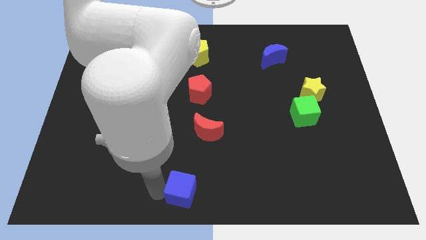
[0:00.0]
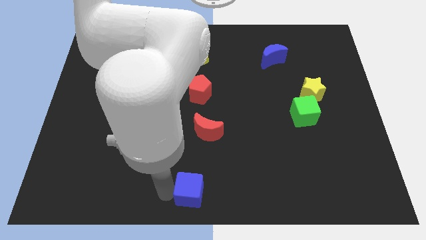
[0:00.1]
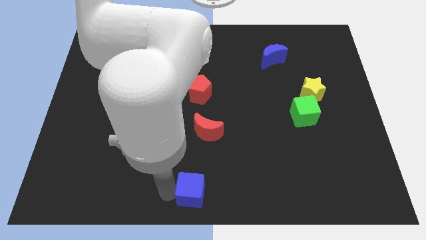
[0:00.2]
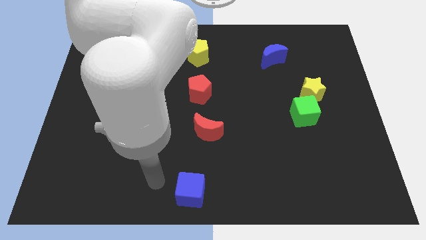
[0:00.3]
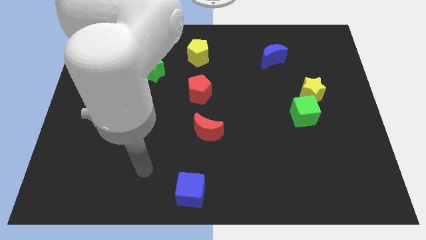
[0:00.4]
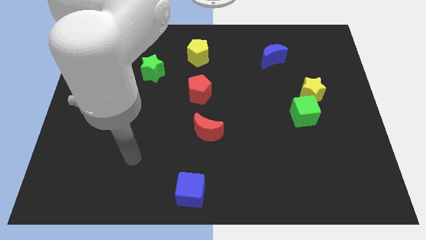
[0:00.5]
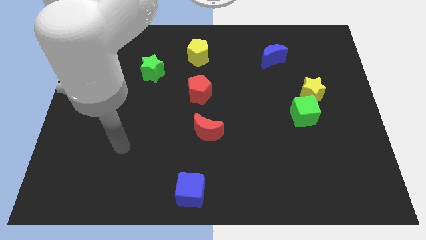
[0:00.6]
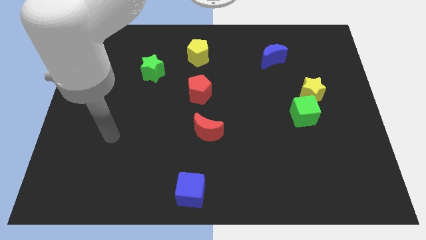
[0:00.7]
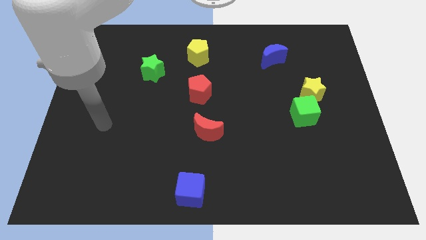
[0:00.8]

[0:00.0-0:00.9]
move your arm away from the blue cube

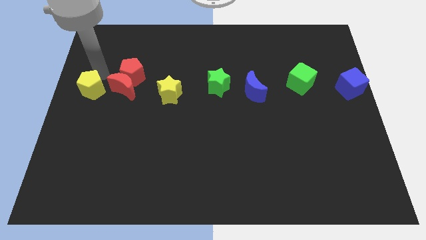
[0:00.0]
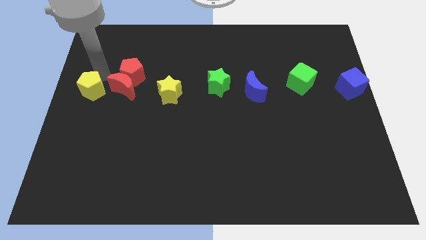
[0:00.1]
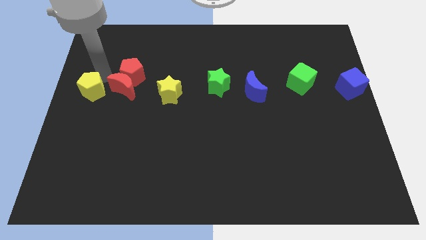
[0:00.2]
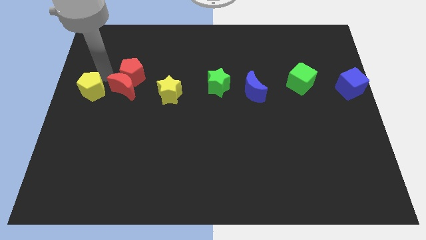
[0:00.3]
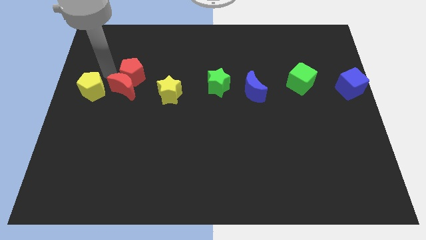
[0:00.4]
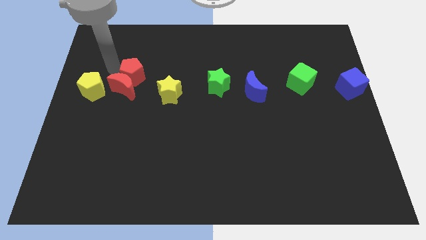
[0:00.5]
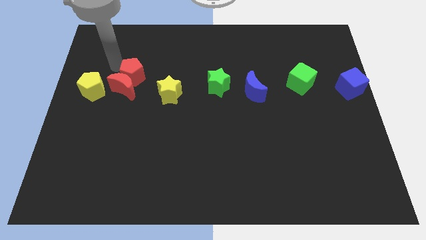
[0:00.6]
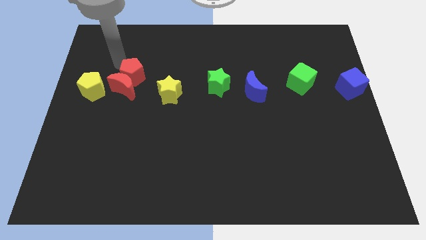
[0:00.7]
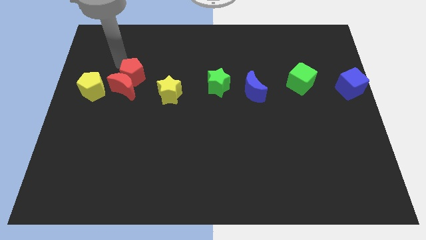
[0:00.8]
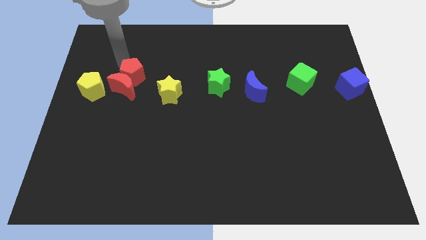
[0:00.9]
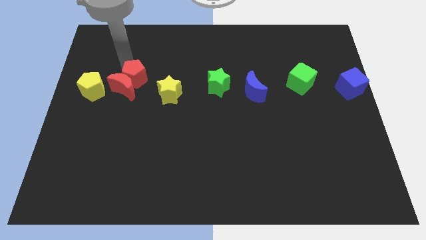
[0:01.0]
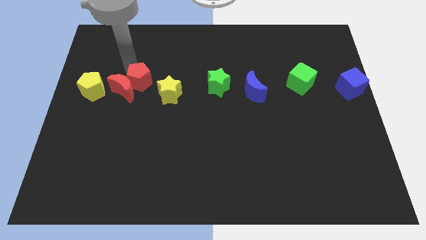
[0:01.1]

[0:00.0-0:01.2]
place the arm diagonal to the red pentagon

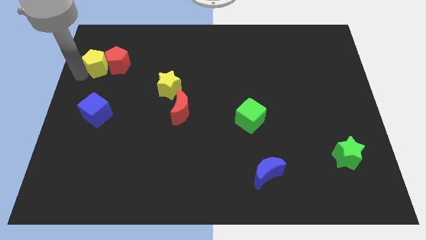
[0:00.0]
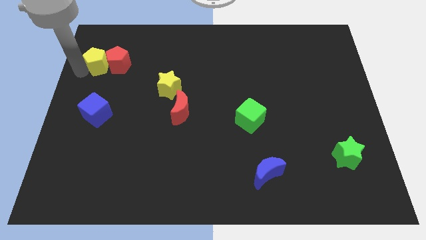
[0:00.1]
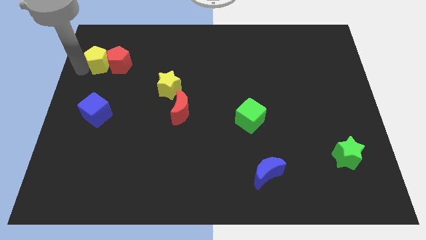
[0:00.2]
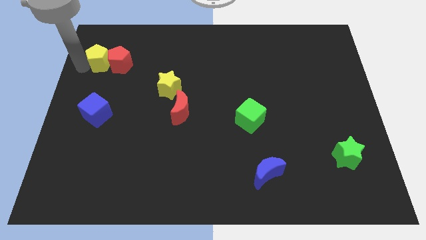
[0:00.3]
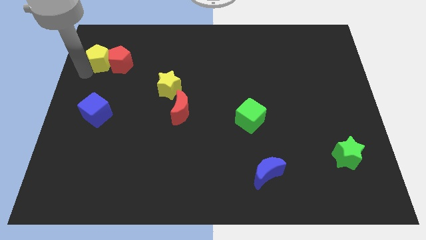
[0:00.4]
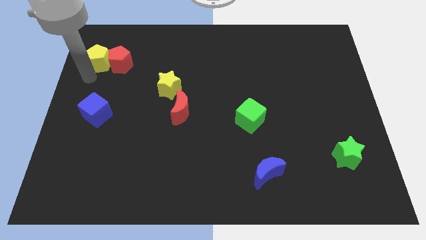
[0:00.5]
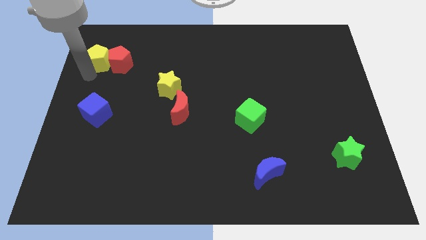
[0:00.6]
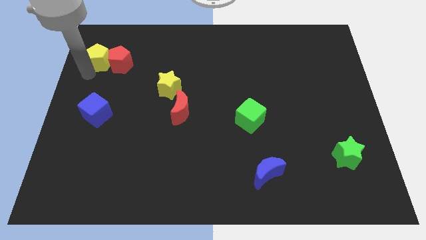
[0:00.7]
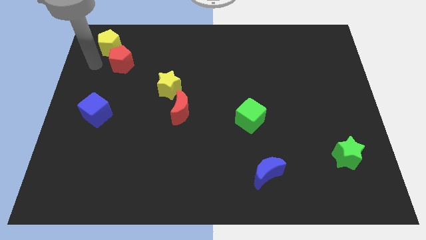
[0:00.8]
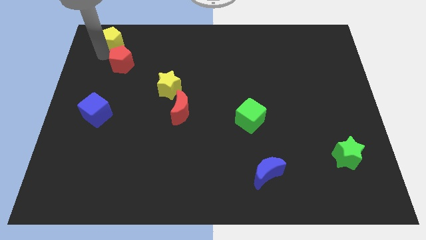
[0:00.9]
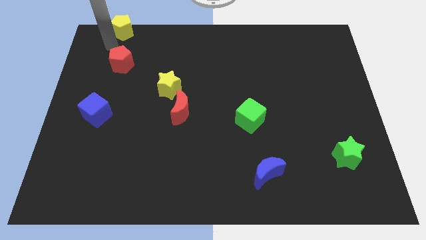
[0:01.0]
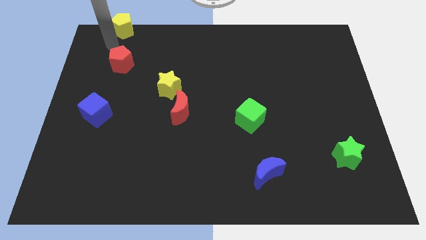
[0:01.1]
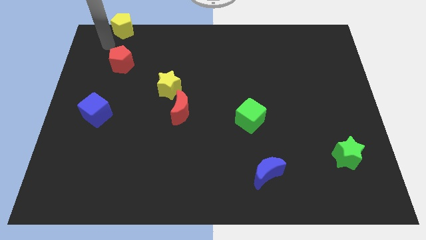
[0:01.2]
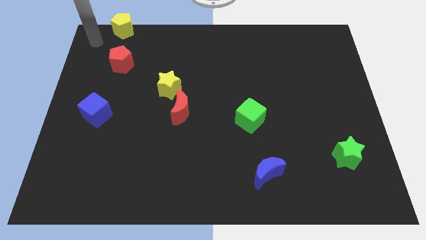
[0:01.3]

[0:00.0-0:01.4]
push yellow pentagon towards top left side of the board

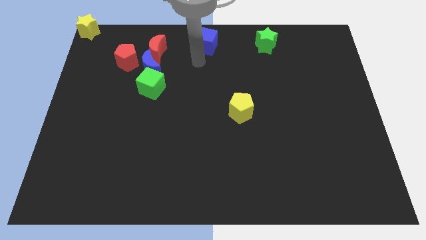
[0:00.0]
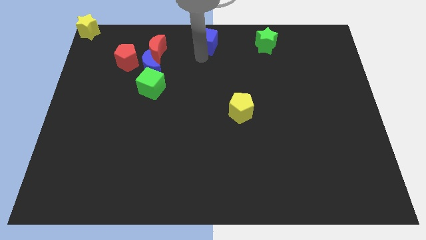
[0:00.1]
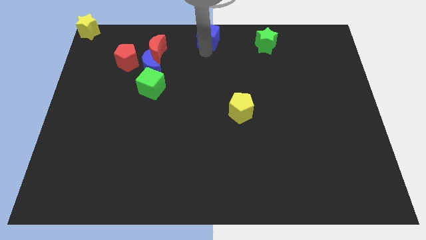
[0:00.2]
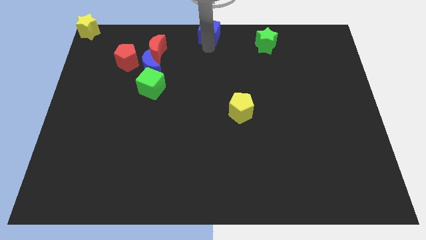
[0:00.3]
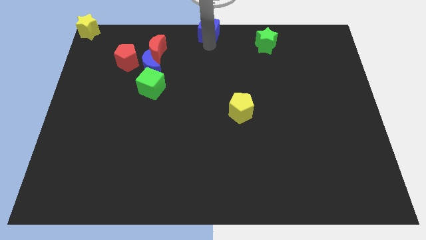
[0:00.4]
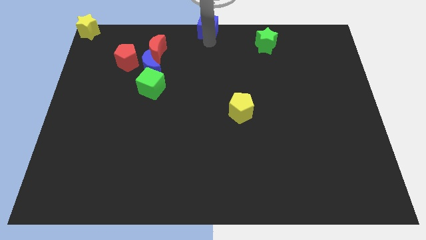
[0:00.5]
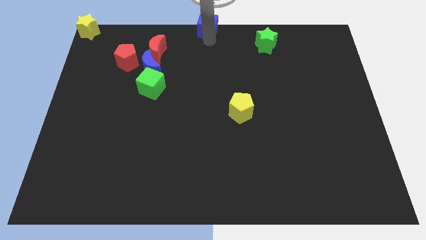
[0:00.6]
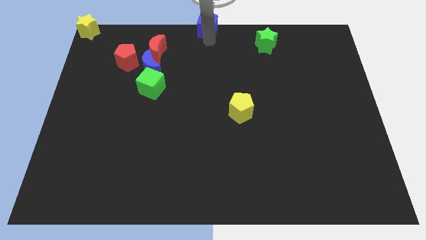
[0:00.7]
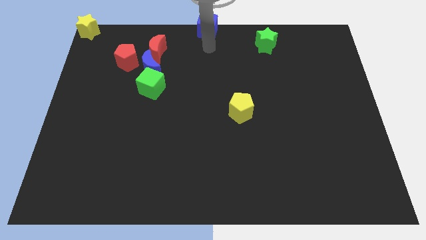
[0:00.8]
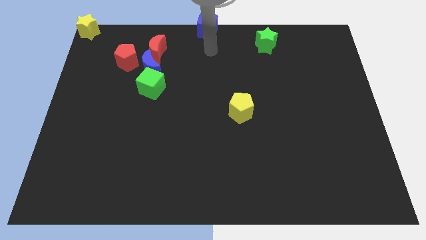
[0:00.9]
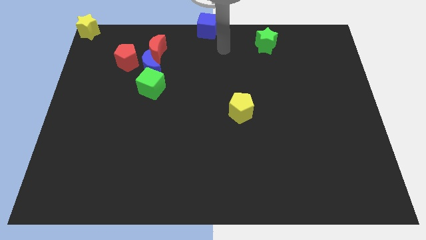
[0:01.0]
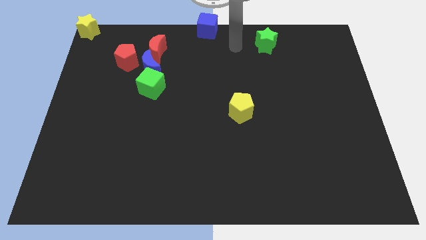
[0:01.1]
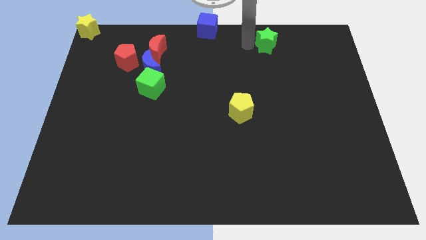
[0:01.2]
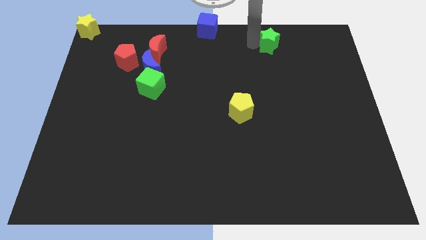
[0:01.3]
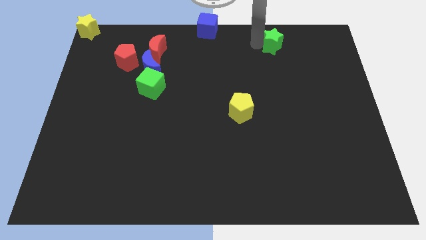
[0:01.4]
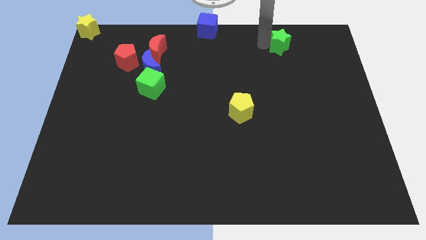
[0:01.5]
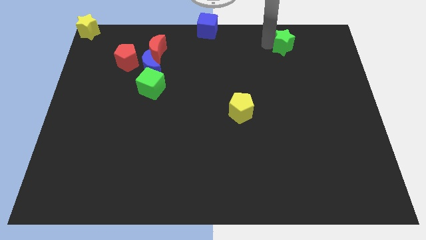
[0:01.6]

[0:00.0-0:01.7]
move the blue cube to the top middle

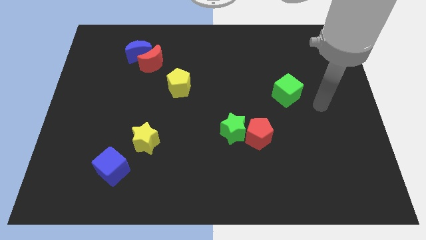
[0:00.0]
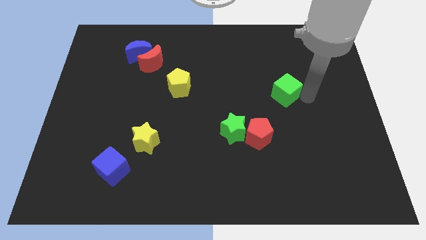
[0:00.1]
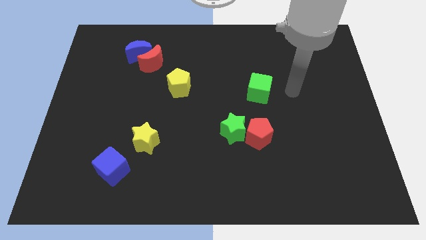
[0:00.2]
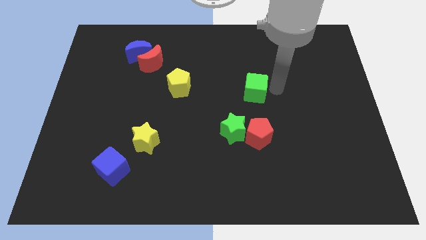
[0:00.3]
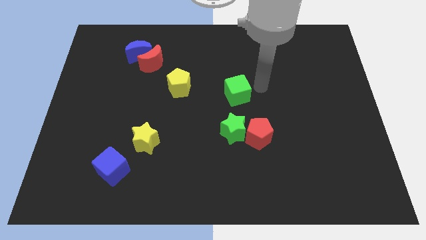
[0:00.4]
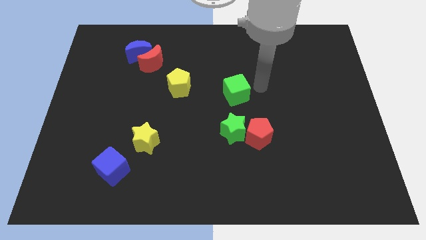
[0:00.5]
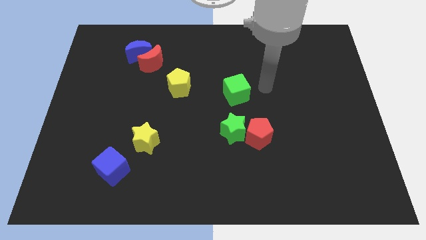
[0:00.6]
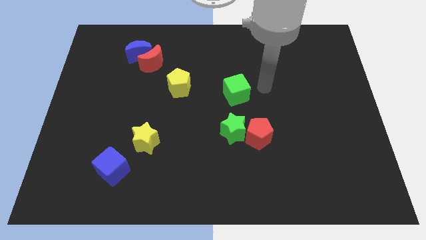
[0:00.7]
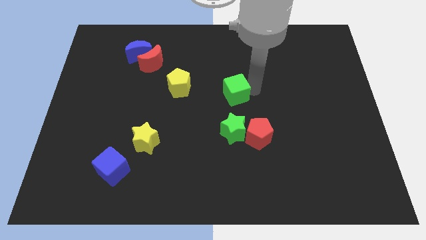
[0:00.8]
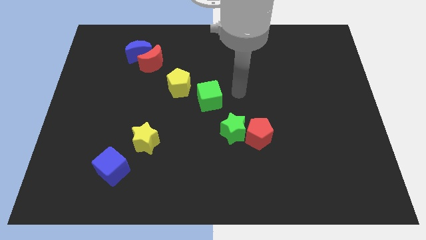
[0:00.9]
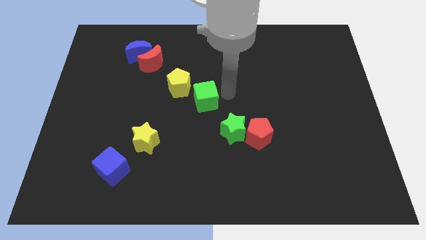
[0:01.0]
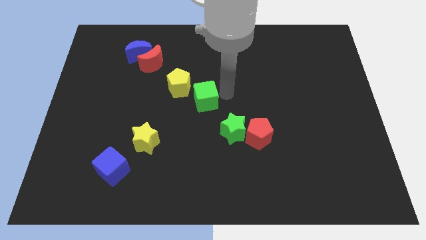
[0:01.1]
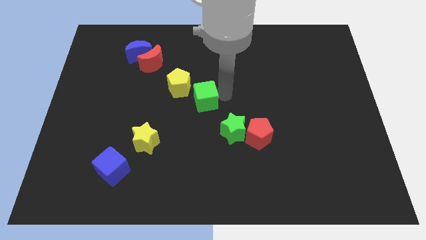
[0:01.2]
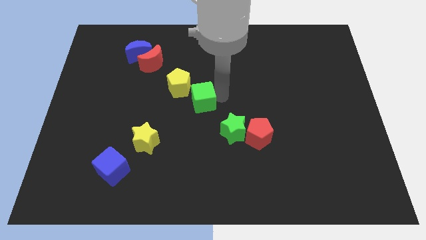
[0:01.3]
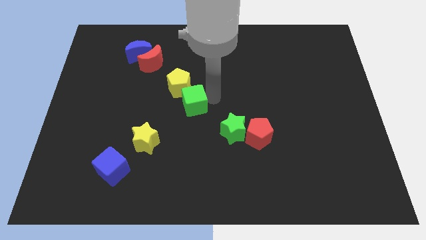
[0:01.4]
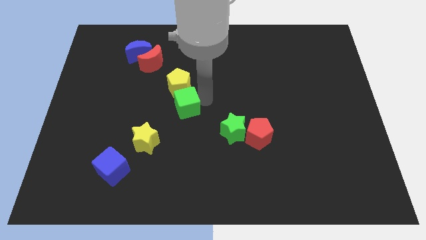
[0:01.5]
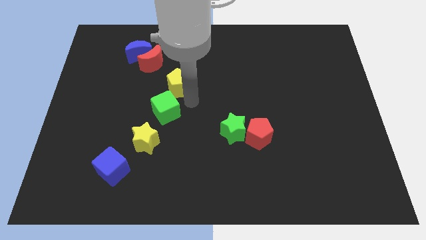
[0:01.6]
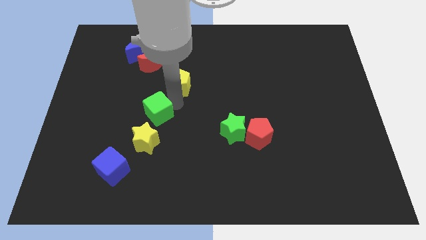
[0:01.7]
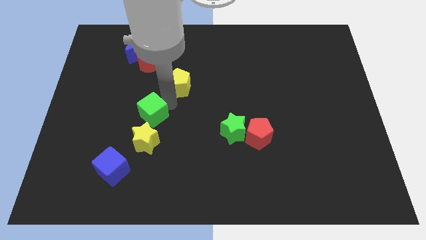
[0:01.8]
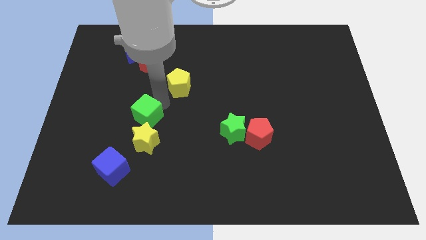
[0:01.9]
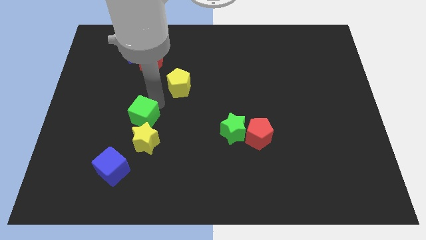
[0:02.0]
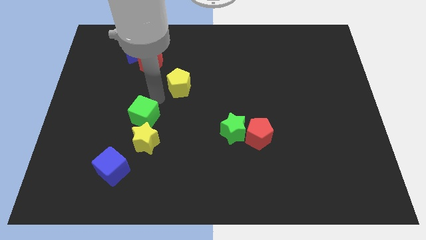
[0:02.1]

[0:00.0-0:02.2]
move the green cube to the top side of the yellow star

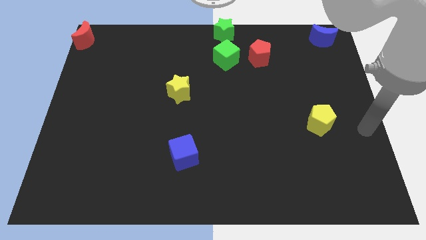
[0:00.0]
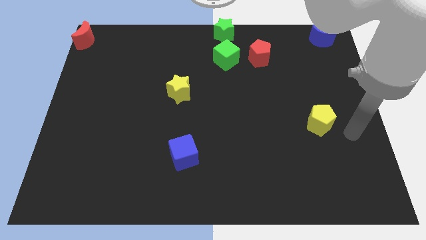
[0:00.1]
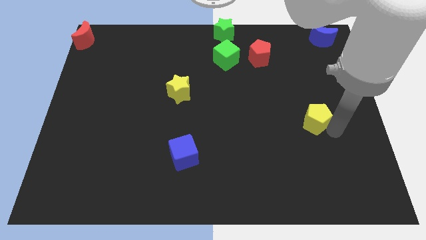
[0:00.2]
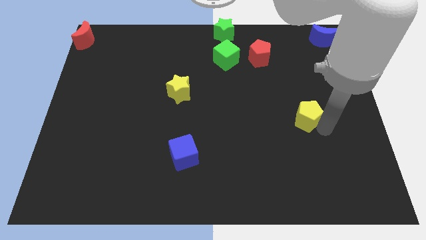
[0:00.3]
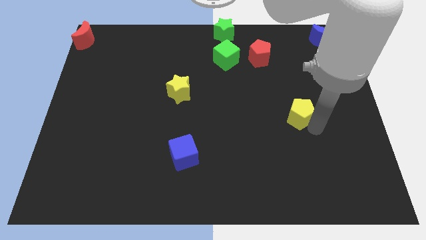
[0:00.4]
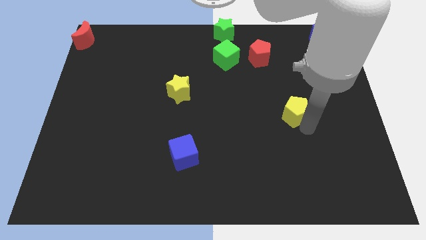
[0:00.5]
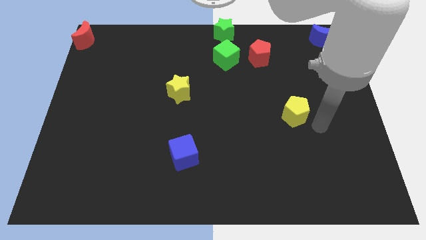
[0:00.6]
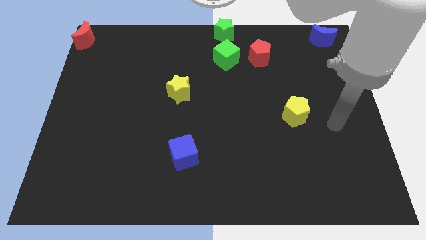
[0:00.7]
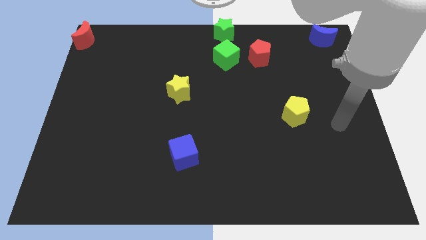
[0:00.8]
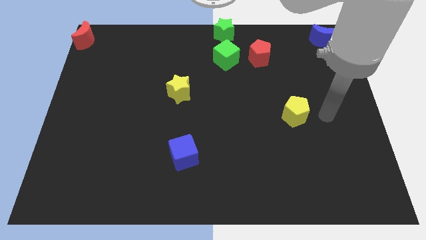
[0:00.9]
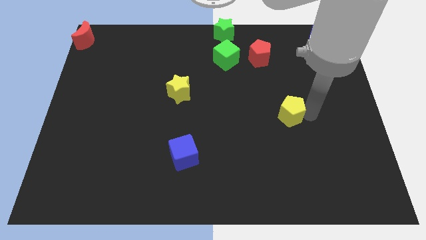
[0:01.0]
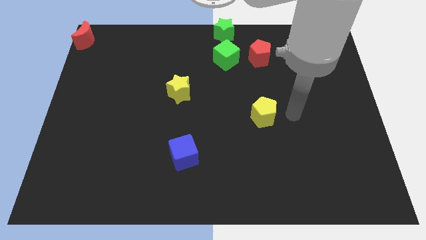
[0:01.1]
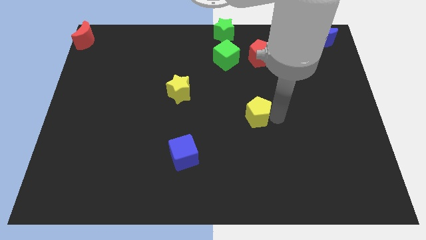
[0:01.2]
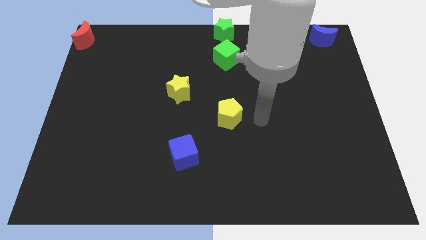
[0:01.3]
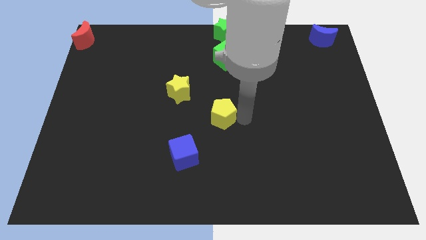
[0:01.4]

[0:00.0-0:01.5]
place the yellow pentagon at the center of the board

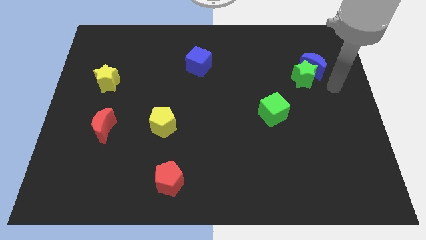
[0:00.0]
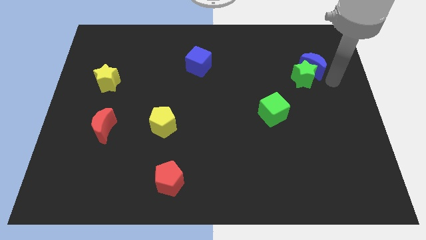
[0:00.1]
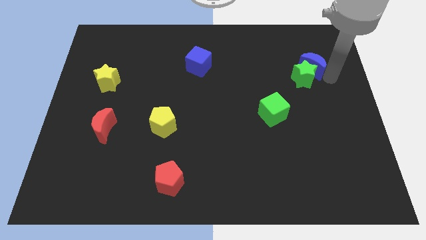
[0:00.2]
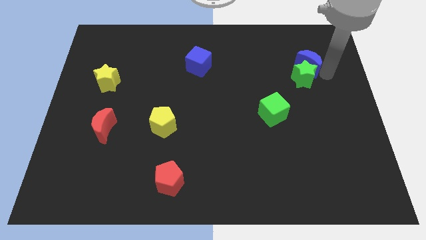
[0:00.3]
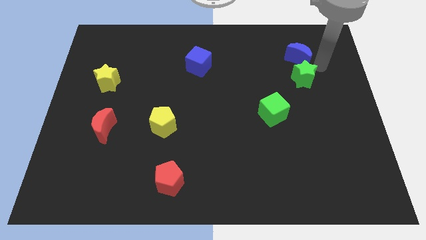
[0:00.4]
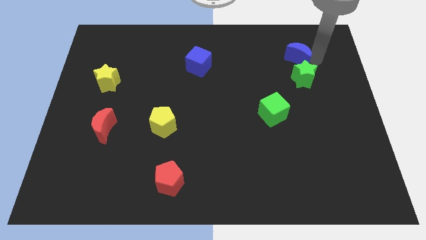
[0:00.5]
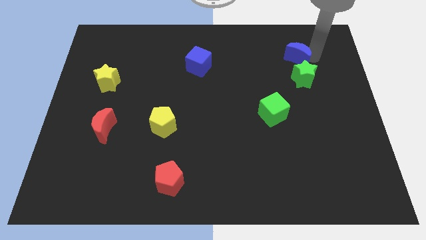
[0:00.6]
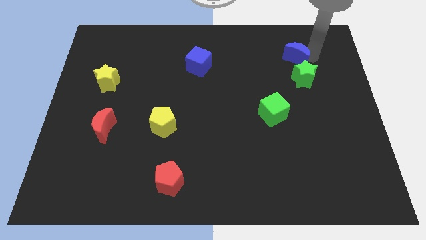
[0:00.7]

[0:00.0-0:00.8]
push blue crescent above green star
